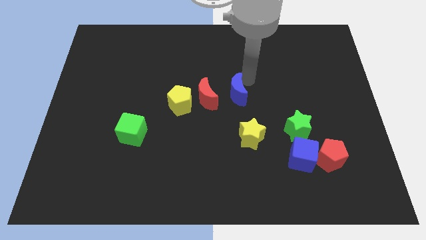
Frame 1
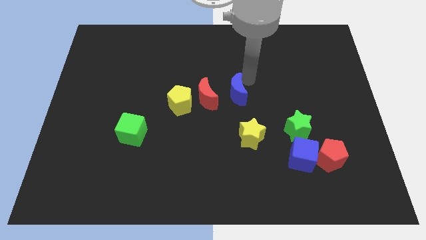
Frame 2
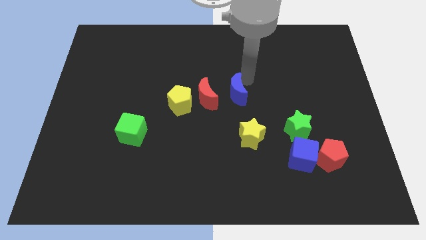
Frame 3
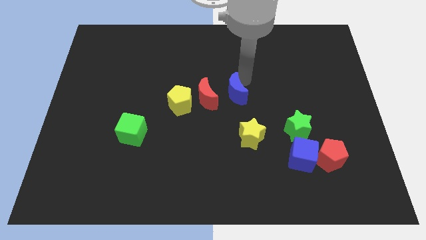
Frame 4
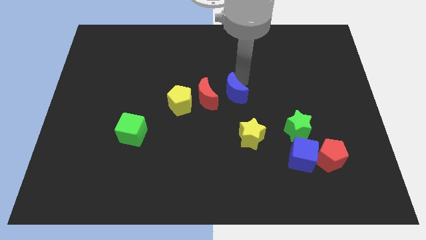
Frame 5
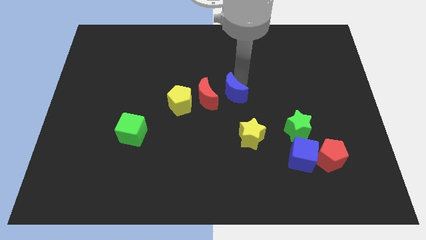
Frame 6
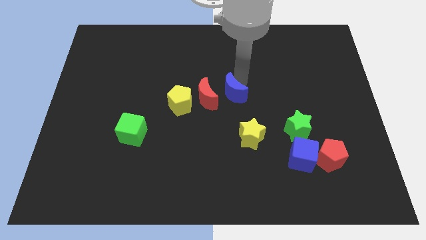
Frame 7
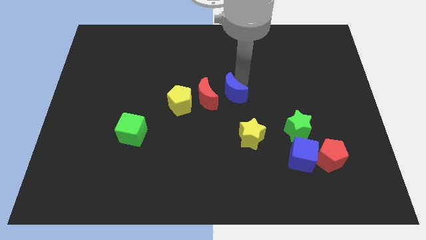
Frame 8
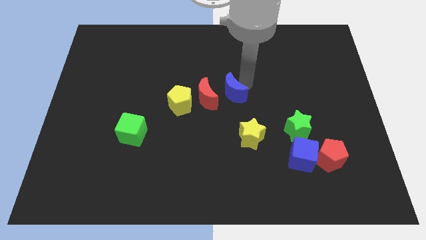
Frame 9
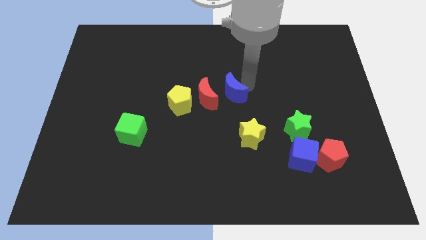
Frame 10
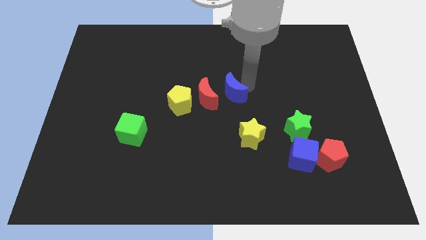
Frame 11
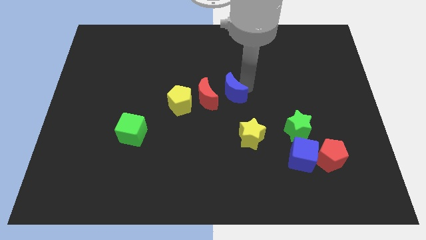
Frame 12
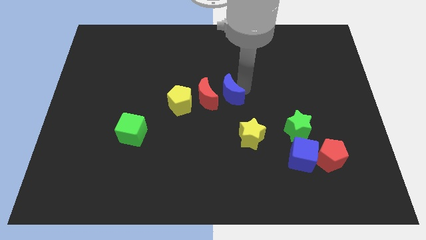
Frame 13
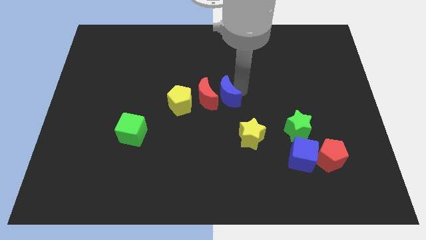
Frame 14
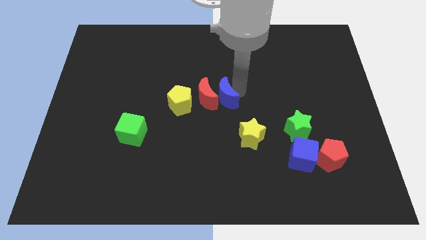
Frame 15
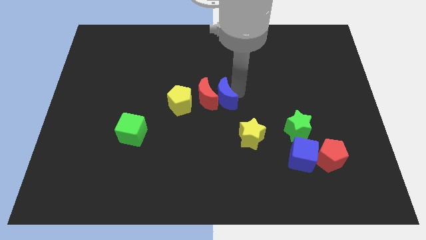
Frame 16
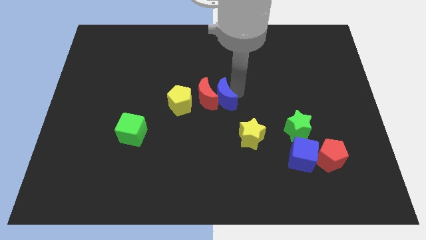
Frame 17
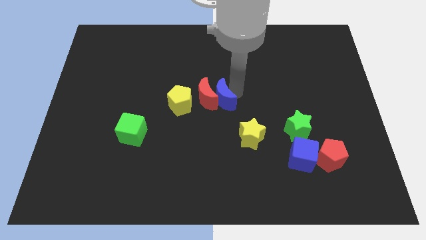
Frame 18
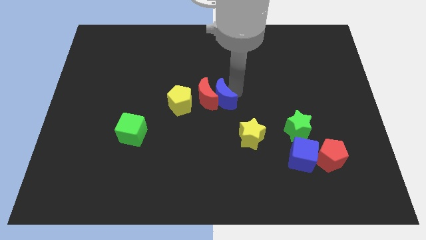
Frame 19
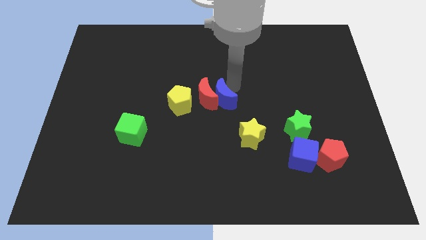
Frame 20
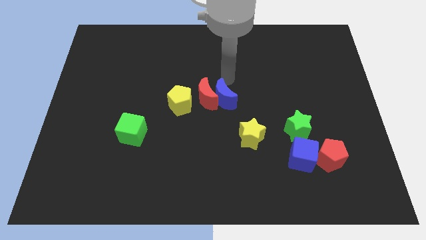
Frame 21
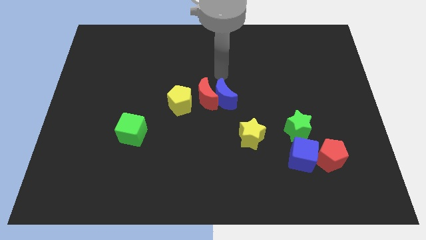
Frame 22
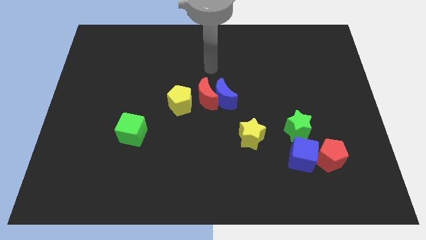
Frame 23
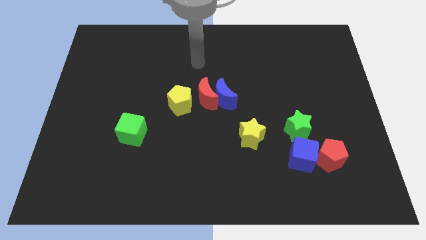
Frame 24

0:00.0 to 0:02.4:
move the blue moon to the right of the to red moon

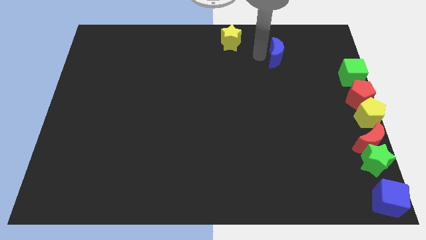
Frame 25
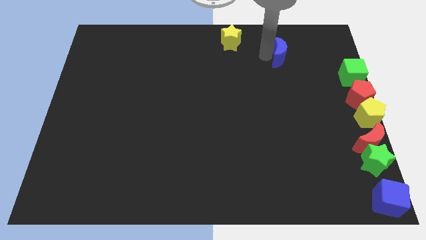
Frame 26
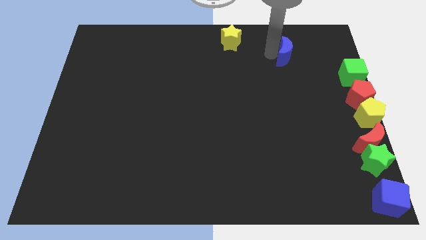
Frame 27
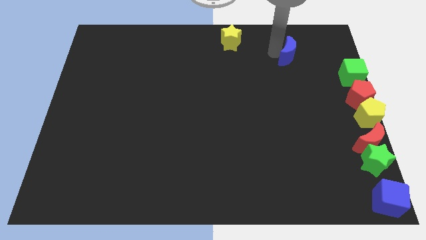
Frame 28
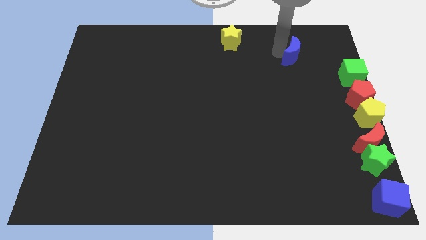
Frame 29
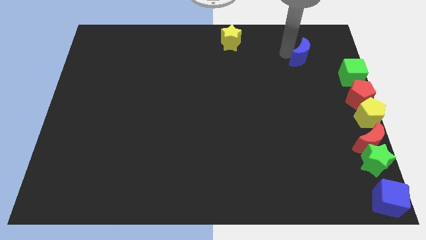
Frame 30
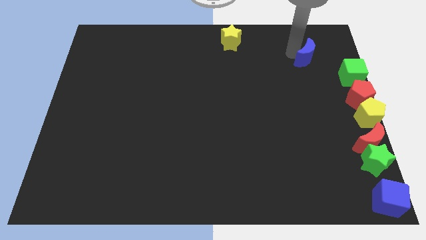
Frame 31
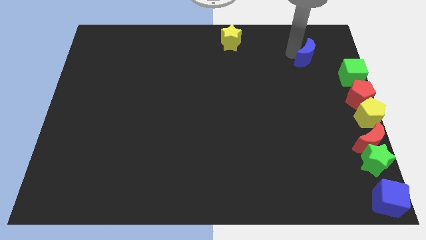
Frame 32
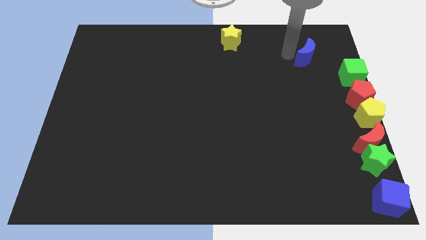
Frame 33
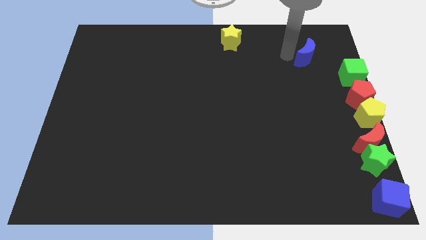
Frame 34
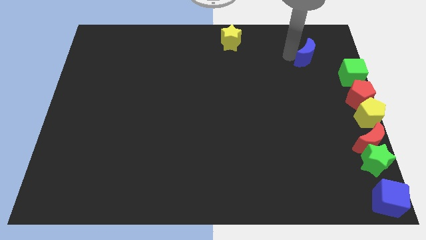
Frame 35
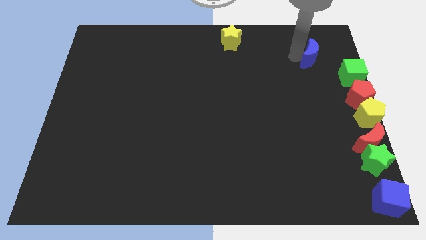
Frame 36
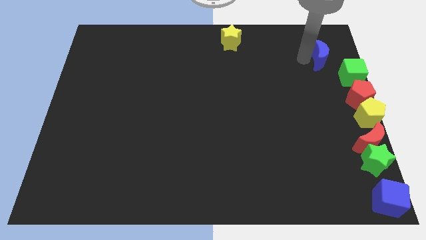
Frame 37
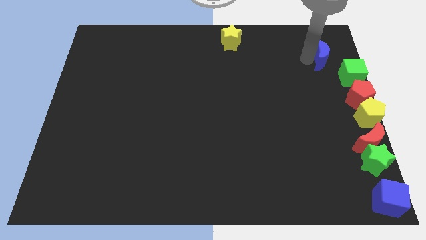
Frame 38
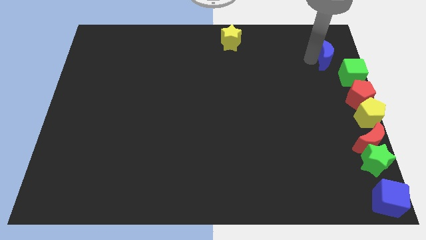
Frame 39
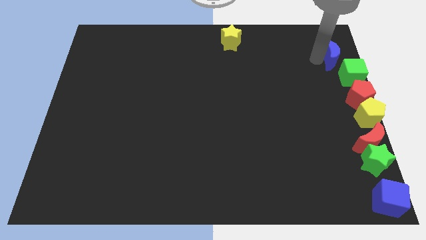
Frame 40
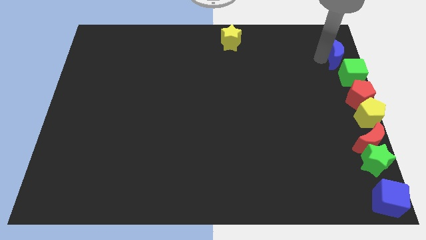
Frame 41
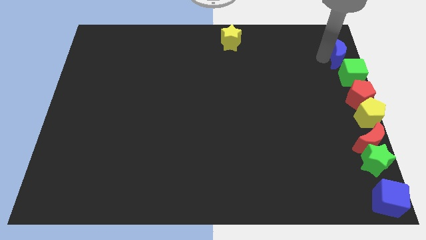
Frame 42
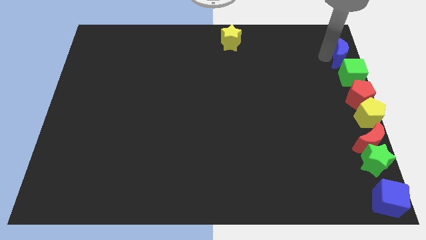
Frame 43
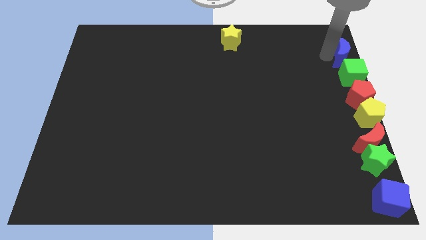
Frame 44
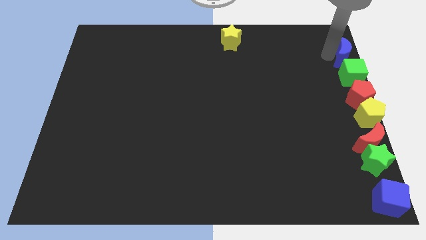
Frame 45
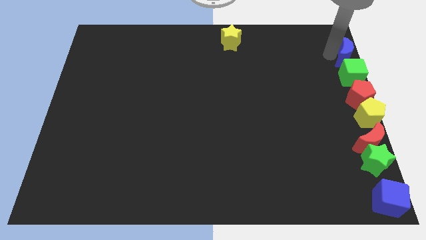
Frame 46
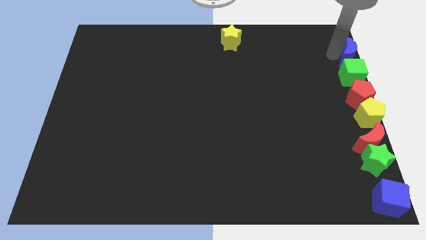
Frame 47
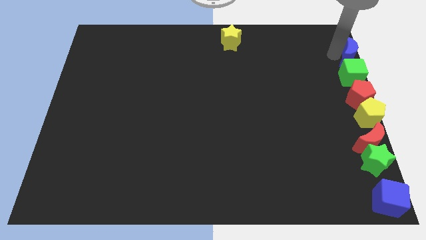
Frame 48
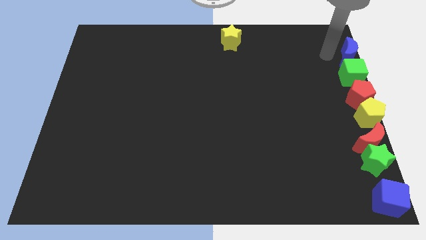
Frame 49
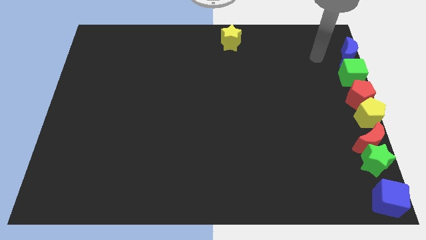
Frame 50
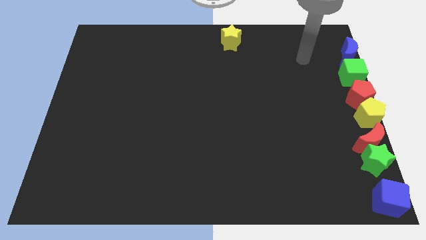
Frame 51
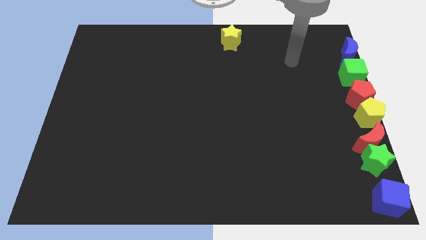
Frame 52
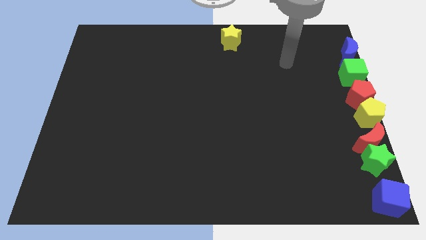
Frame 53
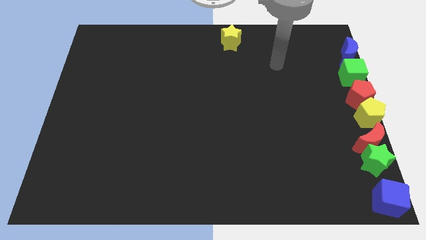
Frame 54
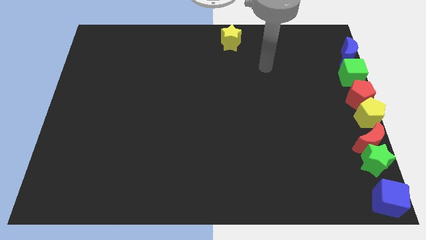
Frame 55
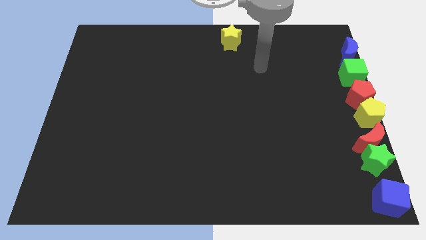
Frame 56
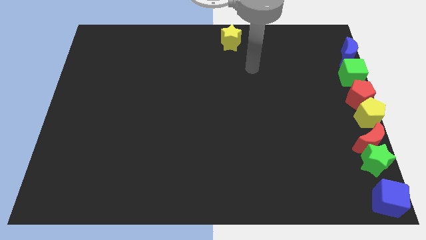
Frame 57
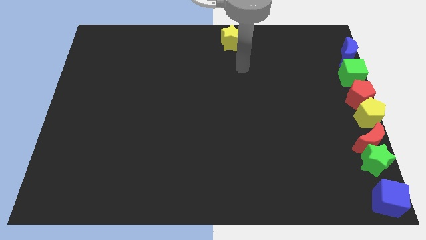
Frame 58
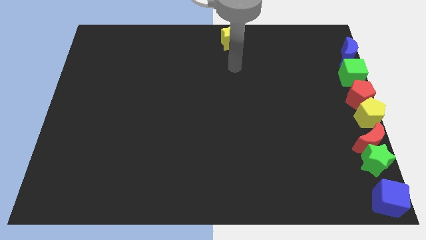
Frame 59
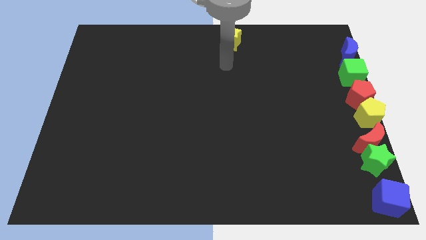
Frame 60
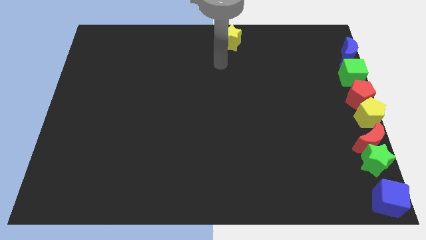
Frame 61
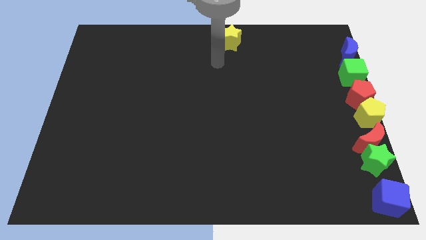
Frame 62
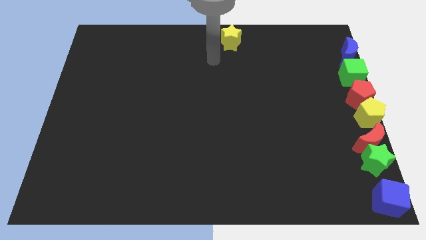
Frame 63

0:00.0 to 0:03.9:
move blue moon above the green cube

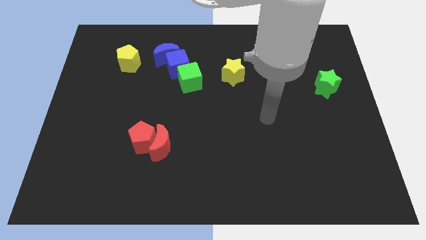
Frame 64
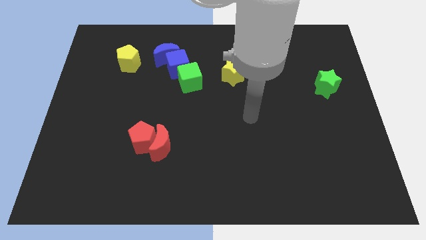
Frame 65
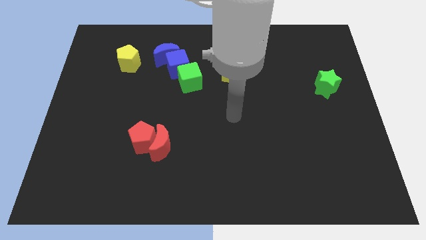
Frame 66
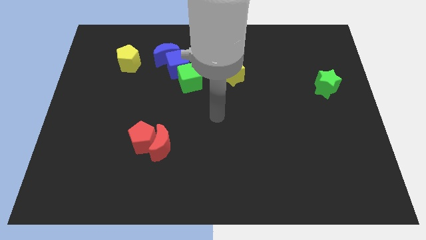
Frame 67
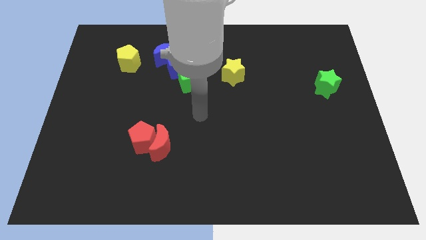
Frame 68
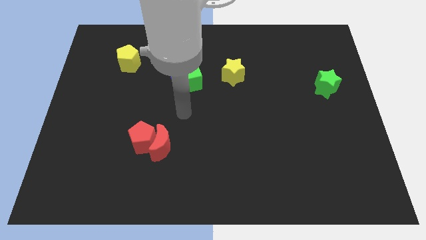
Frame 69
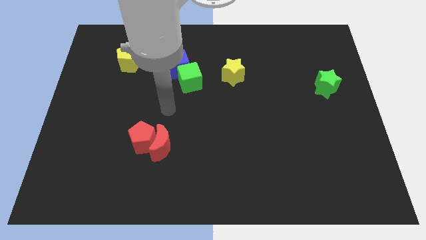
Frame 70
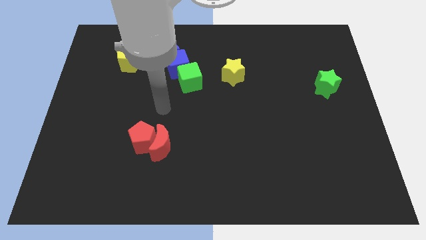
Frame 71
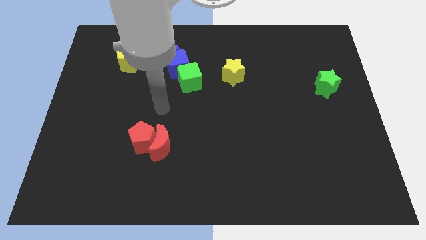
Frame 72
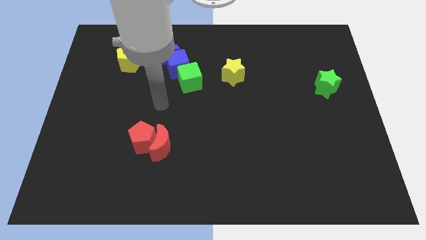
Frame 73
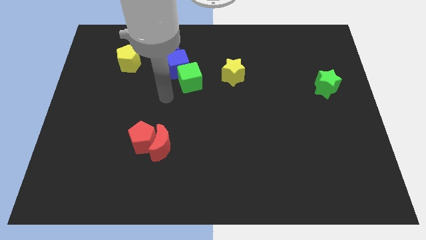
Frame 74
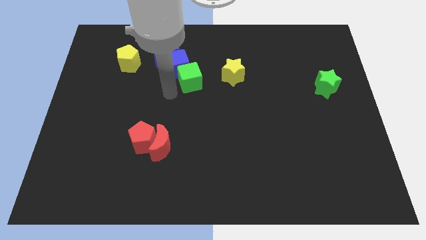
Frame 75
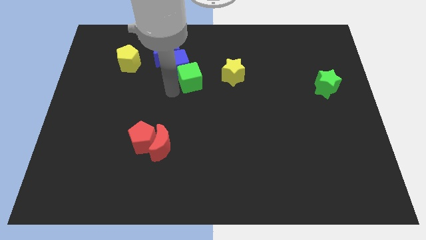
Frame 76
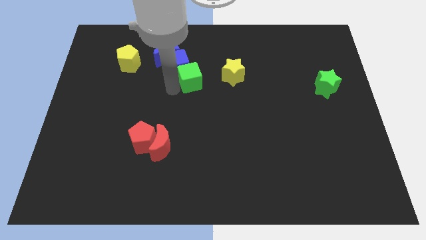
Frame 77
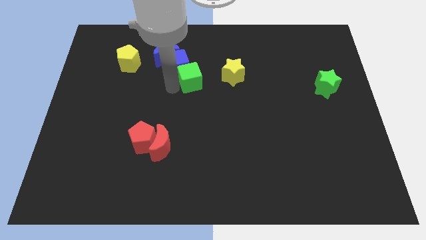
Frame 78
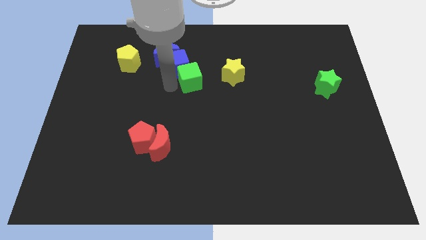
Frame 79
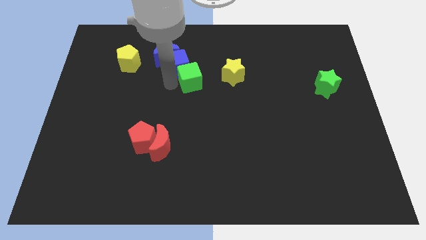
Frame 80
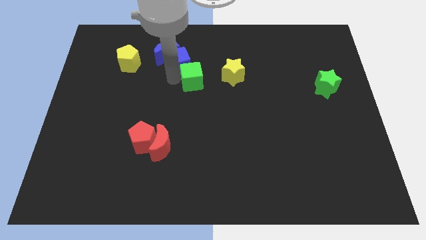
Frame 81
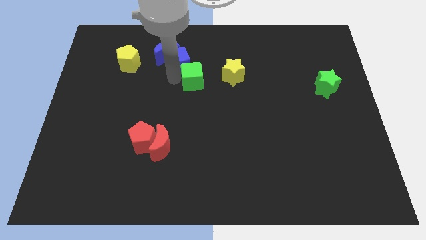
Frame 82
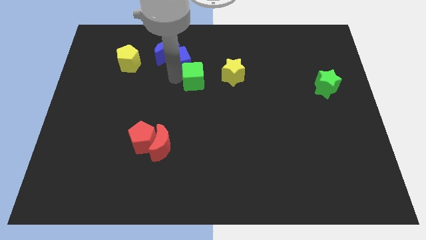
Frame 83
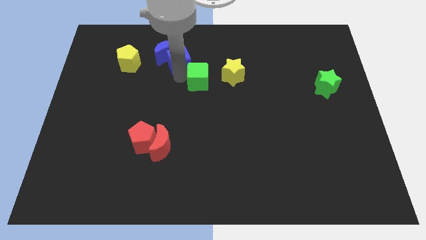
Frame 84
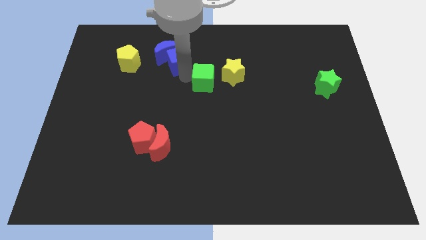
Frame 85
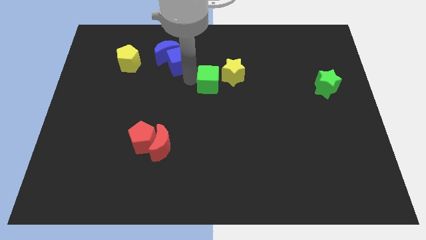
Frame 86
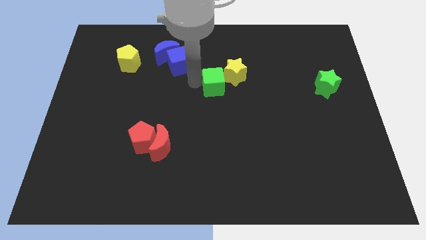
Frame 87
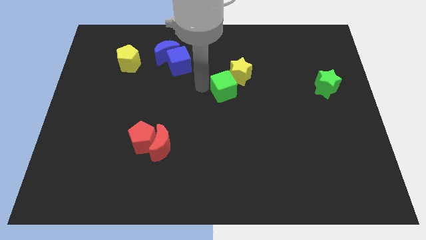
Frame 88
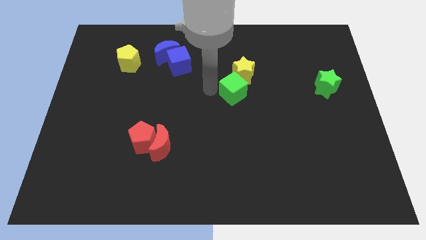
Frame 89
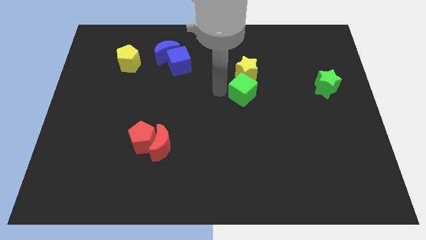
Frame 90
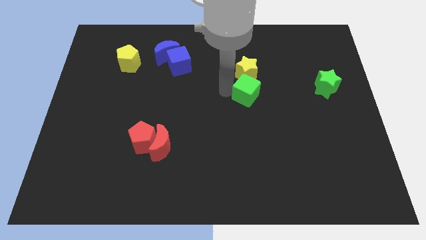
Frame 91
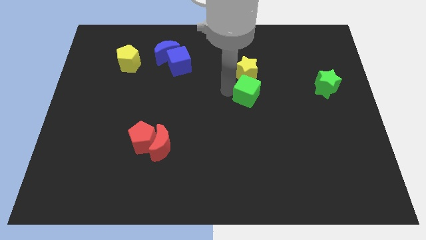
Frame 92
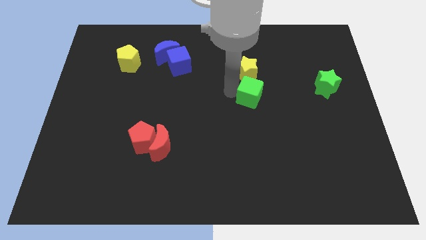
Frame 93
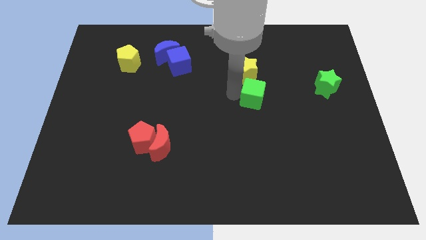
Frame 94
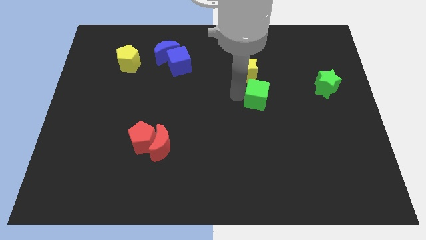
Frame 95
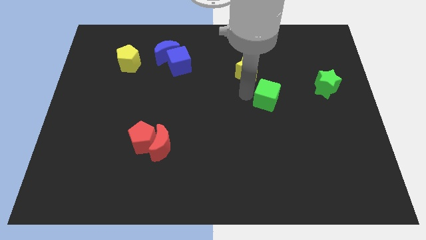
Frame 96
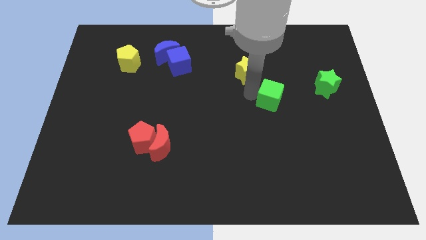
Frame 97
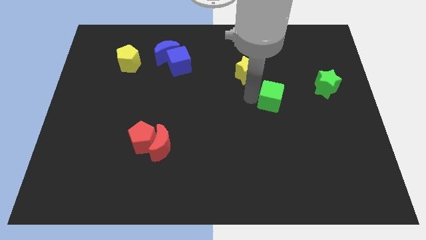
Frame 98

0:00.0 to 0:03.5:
place the green cube diagonal to the yellow star
